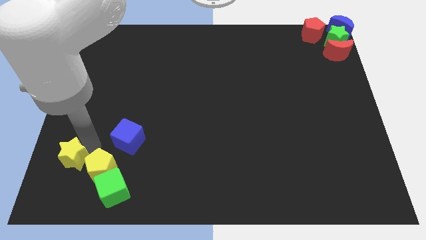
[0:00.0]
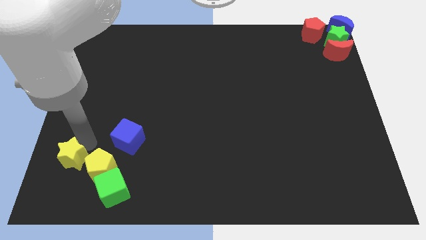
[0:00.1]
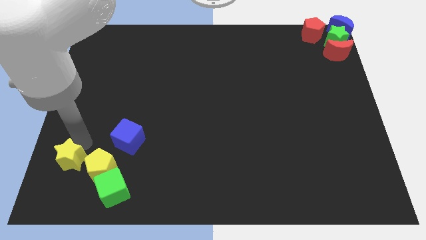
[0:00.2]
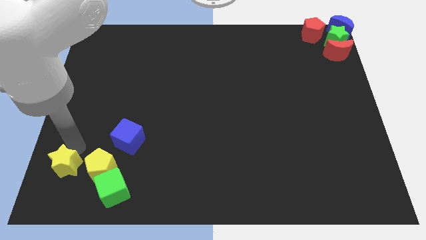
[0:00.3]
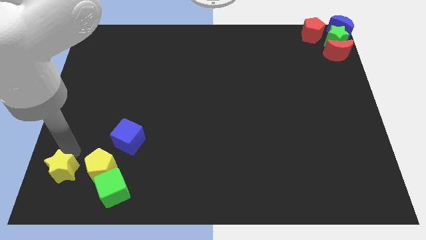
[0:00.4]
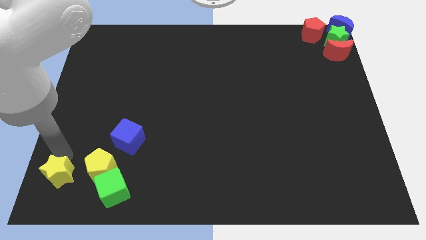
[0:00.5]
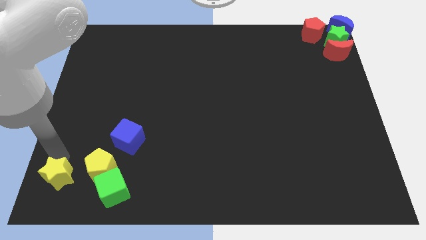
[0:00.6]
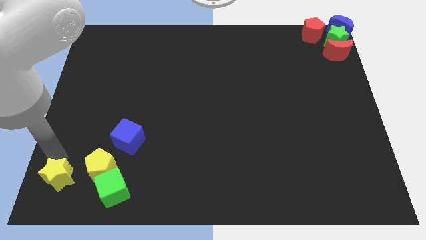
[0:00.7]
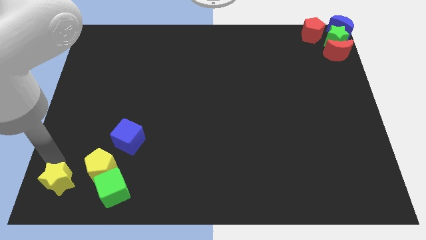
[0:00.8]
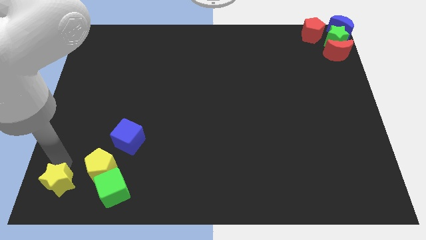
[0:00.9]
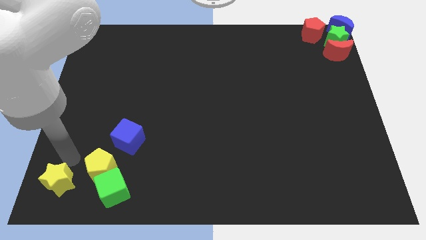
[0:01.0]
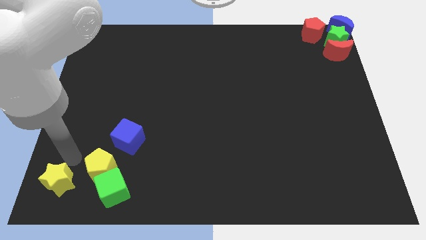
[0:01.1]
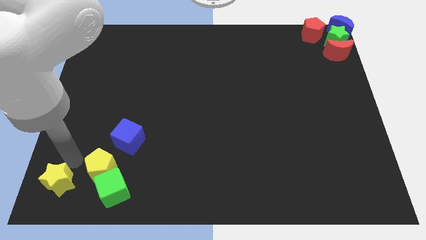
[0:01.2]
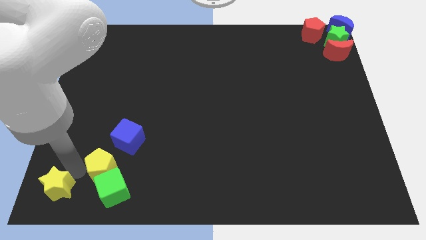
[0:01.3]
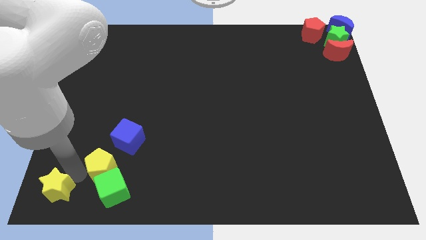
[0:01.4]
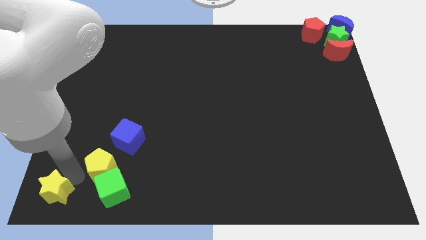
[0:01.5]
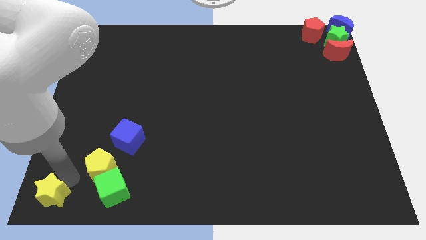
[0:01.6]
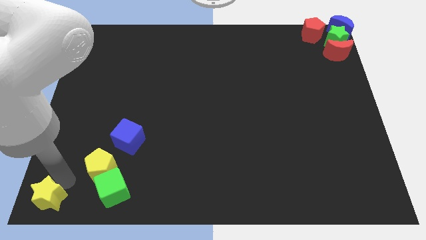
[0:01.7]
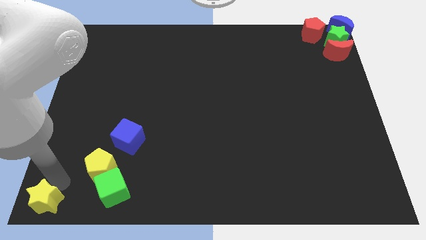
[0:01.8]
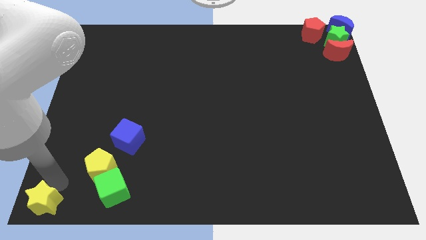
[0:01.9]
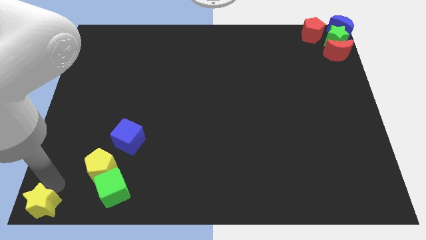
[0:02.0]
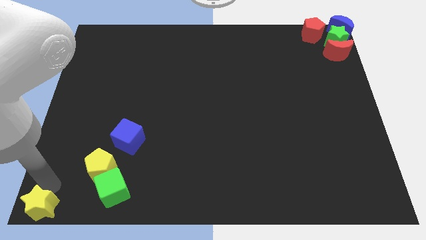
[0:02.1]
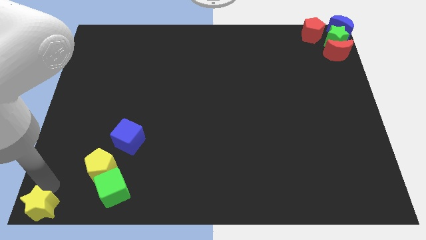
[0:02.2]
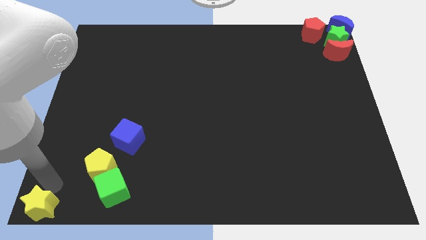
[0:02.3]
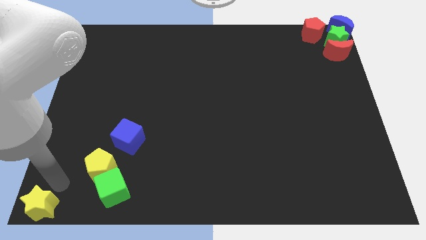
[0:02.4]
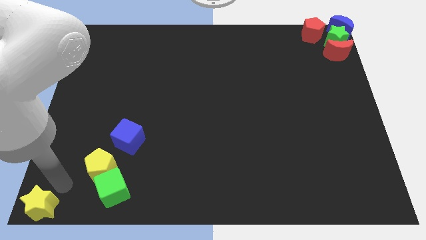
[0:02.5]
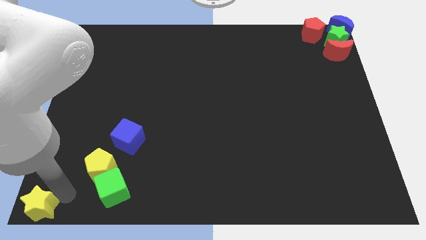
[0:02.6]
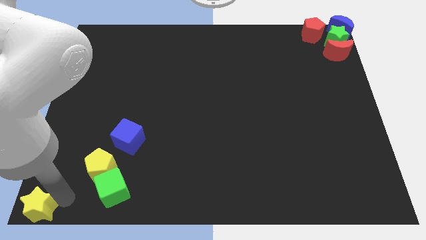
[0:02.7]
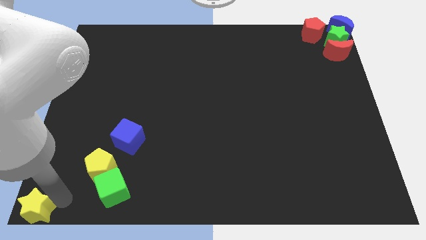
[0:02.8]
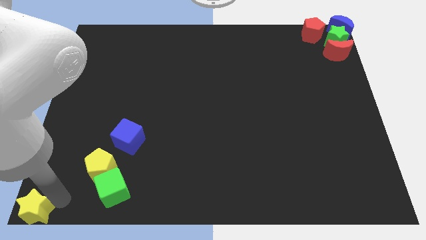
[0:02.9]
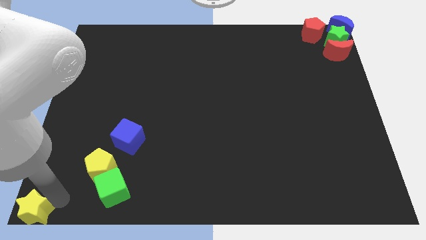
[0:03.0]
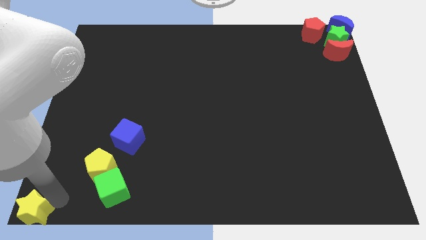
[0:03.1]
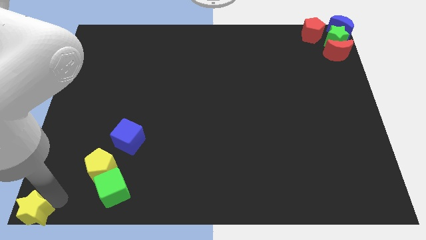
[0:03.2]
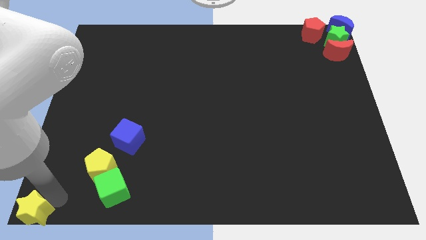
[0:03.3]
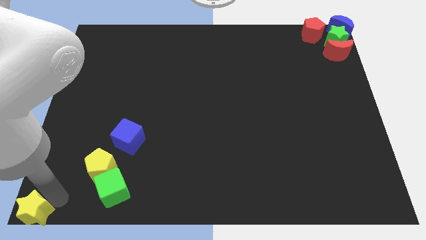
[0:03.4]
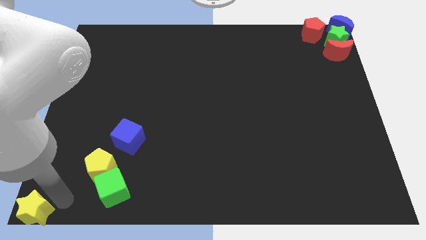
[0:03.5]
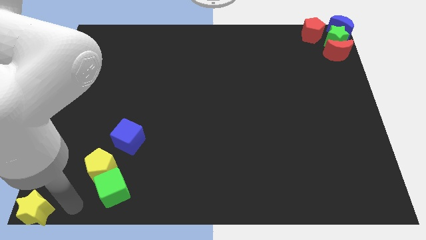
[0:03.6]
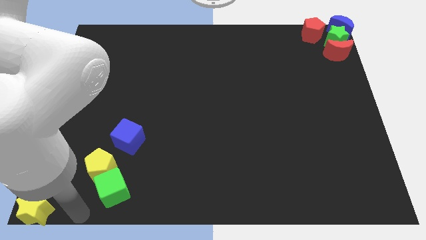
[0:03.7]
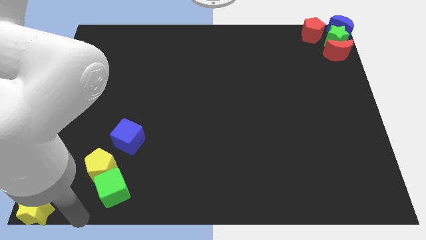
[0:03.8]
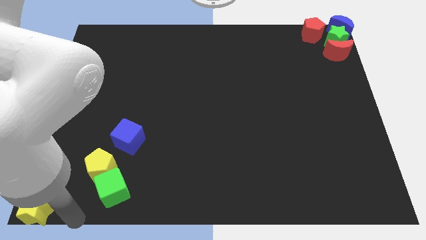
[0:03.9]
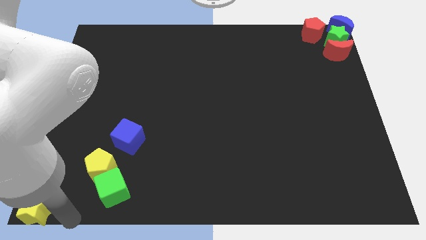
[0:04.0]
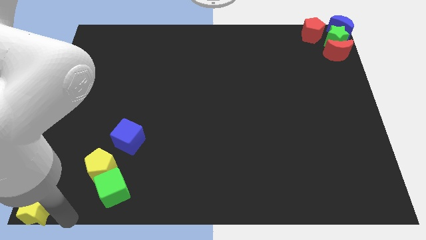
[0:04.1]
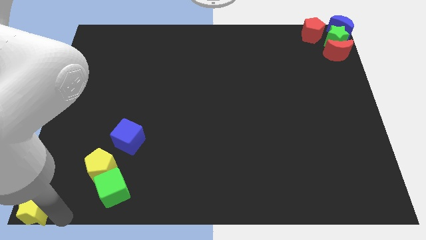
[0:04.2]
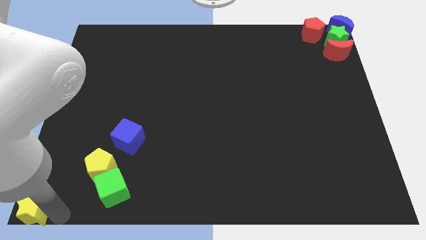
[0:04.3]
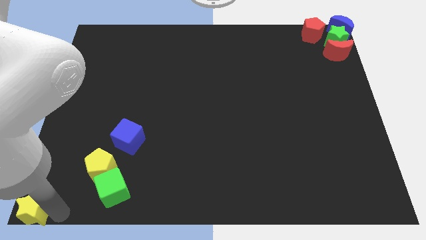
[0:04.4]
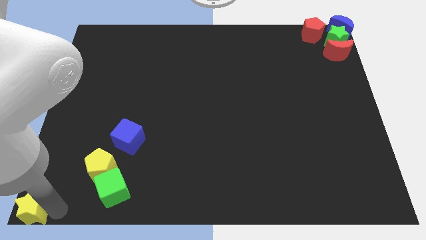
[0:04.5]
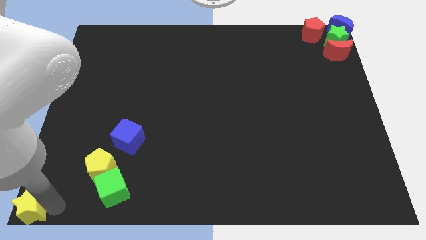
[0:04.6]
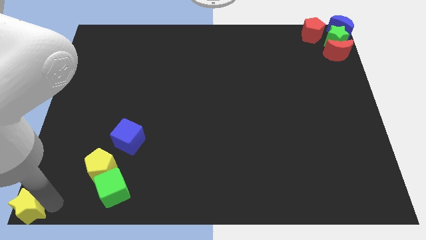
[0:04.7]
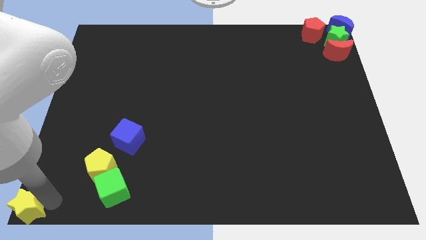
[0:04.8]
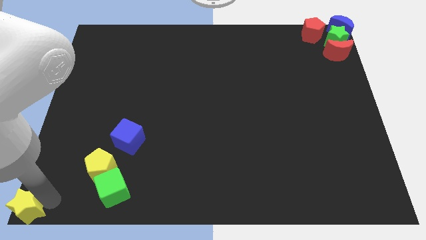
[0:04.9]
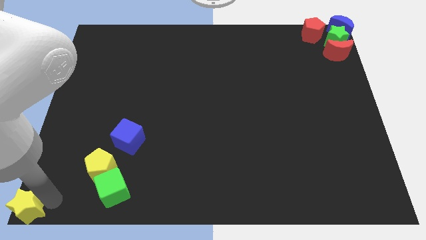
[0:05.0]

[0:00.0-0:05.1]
move the yellow star to the left bottom

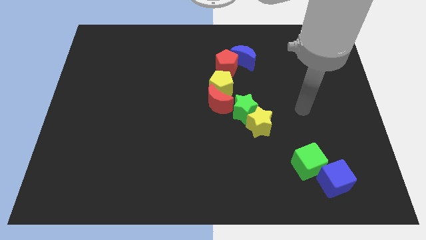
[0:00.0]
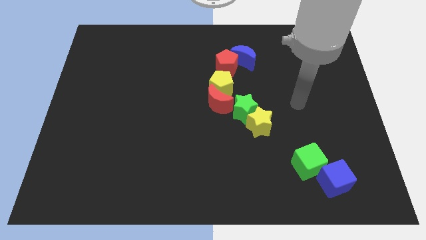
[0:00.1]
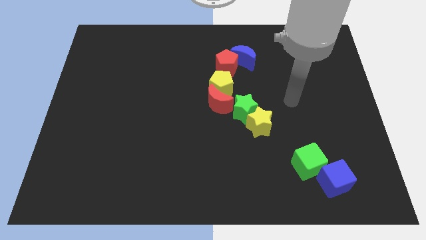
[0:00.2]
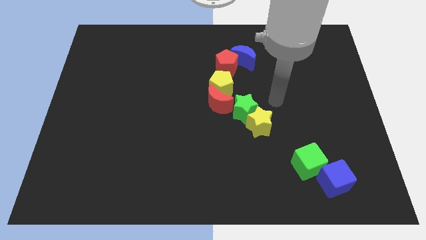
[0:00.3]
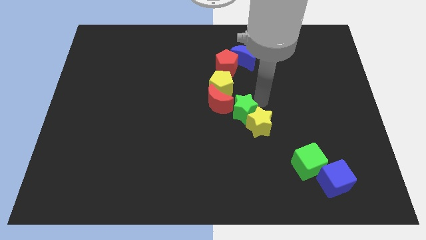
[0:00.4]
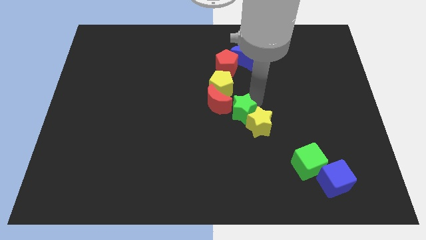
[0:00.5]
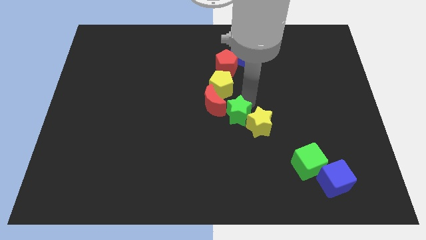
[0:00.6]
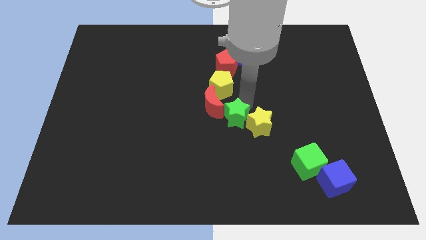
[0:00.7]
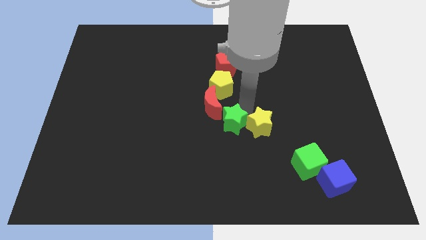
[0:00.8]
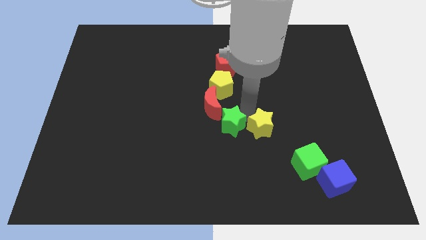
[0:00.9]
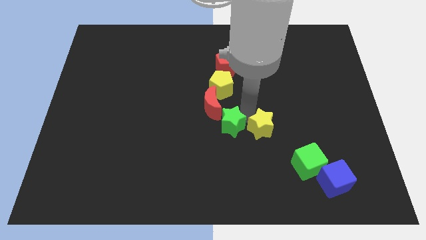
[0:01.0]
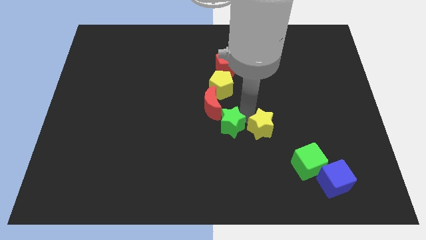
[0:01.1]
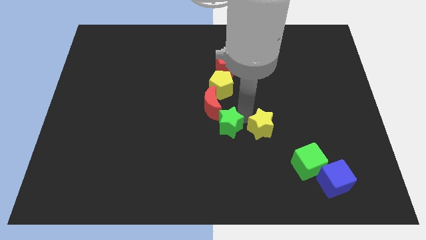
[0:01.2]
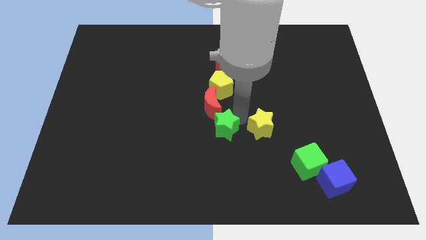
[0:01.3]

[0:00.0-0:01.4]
separate green star from yellow star

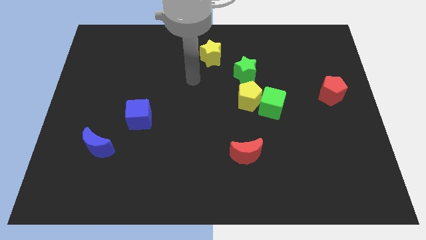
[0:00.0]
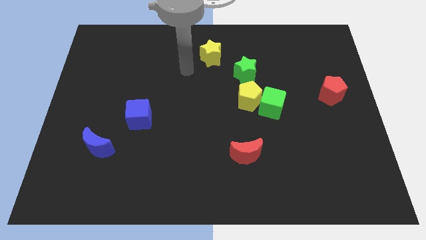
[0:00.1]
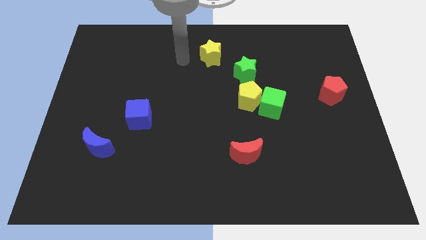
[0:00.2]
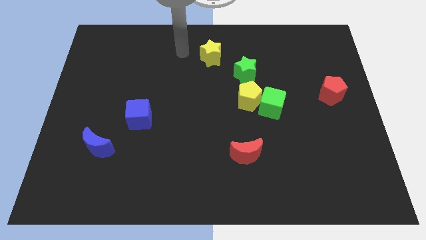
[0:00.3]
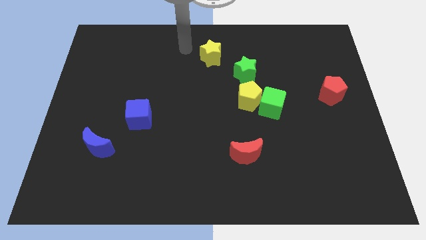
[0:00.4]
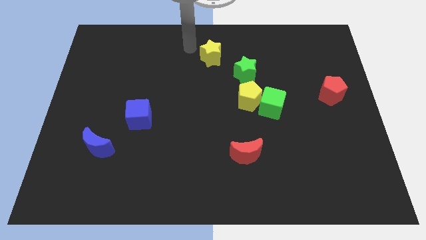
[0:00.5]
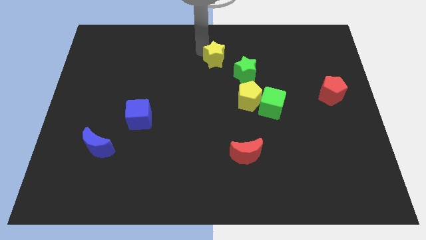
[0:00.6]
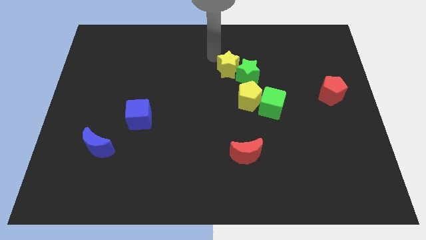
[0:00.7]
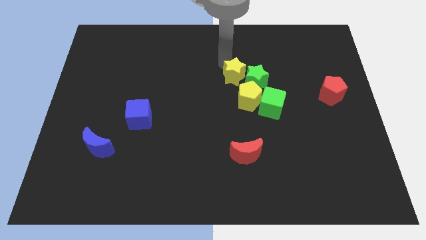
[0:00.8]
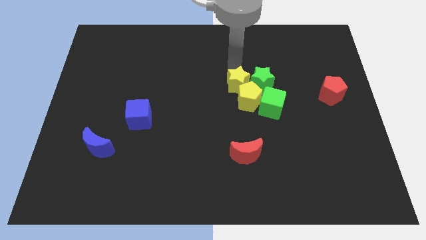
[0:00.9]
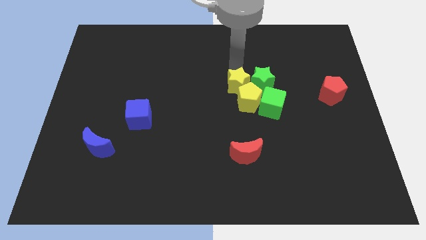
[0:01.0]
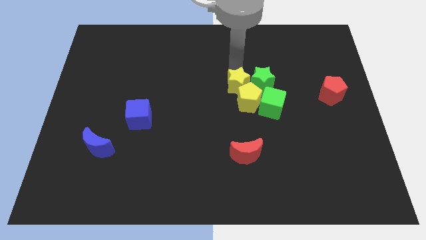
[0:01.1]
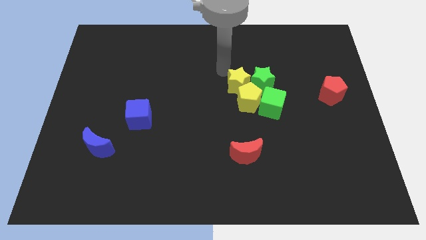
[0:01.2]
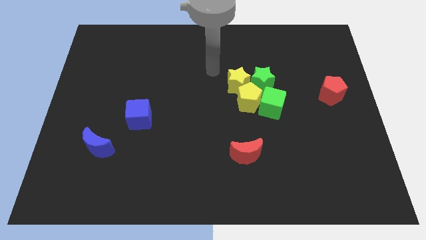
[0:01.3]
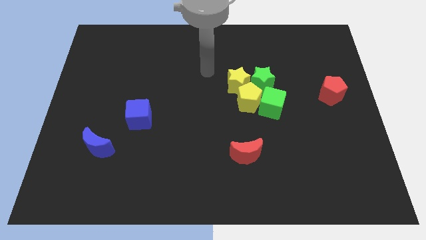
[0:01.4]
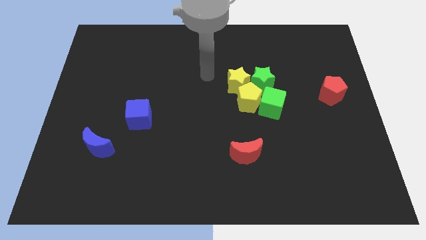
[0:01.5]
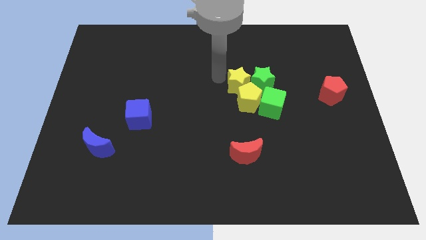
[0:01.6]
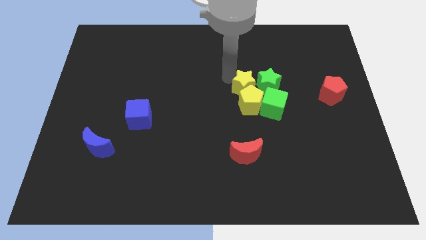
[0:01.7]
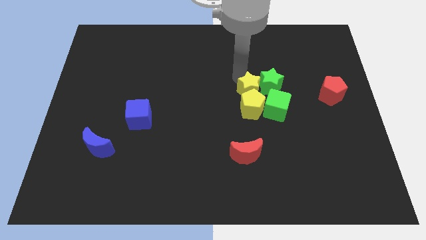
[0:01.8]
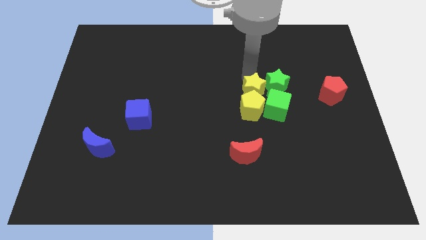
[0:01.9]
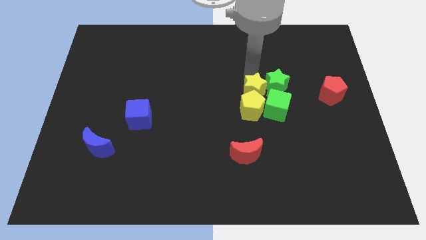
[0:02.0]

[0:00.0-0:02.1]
slide the yellow star at the upper side of the yellow pentagon

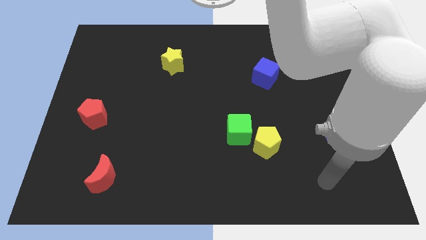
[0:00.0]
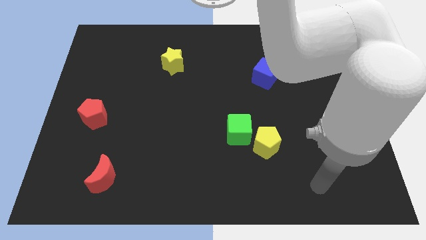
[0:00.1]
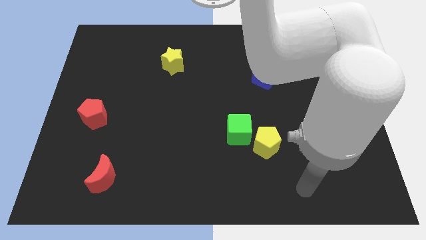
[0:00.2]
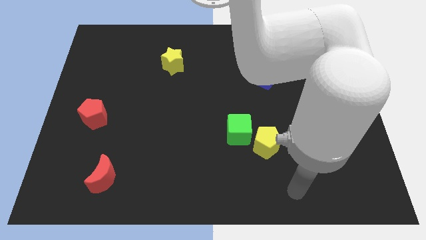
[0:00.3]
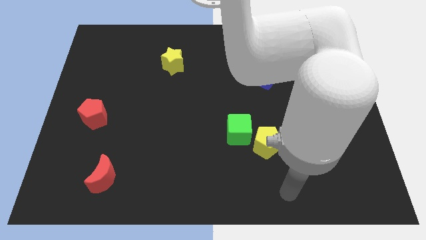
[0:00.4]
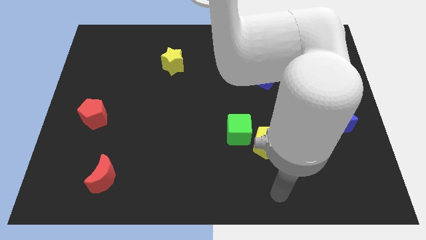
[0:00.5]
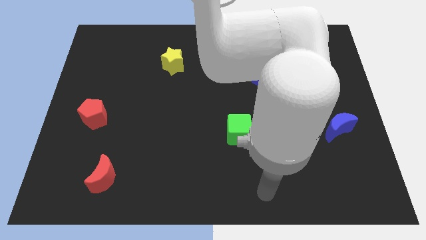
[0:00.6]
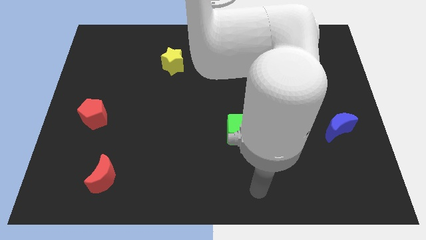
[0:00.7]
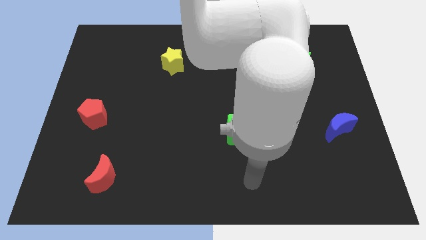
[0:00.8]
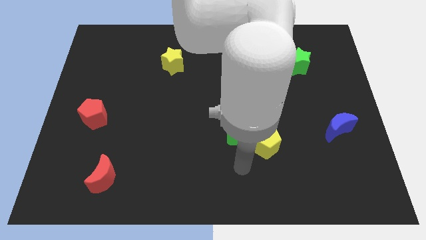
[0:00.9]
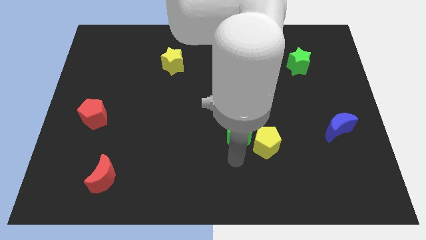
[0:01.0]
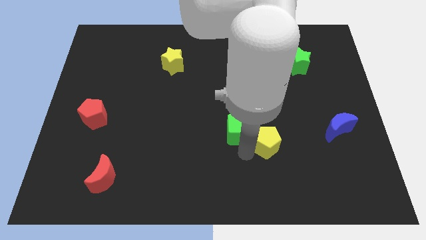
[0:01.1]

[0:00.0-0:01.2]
move your arm to the bottom of green cube
